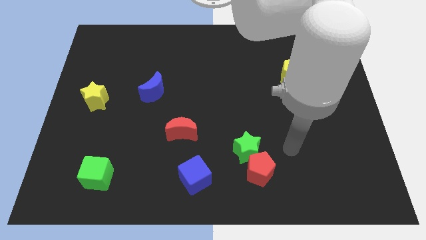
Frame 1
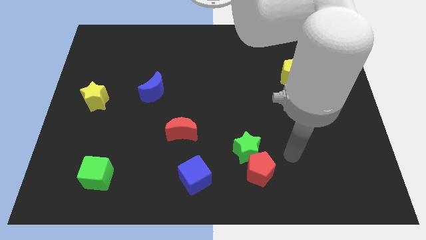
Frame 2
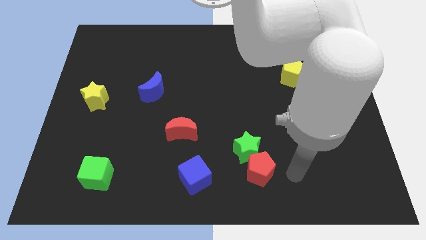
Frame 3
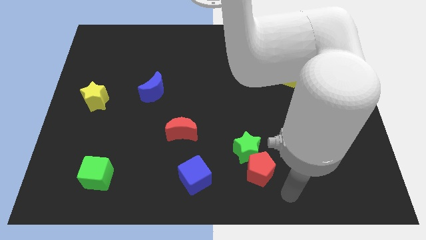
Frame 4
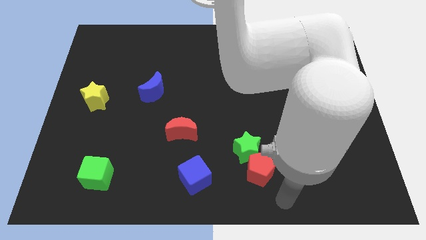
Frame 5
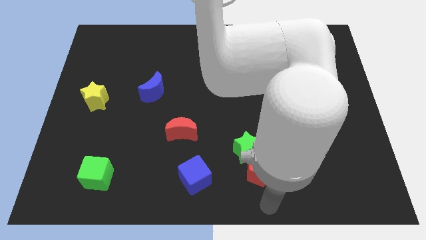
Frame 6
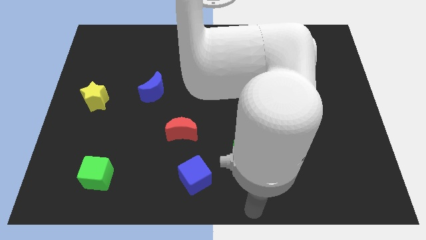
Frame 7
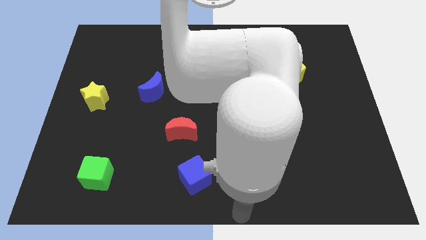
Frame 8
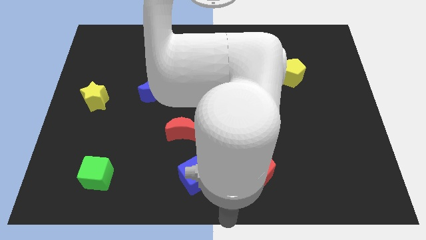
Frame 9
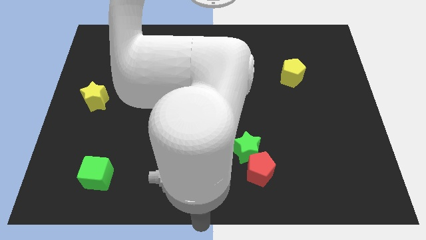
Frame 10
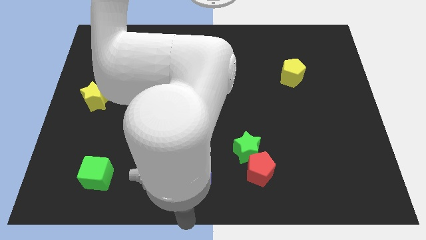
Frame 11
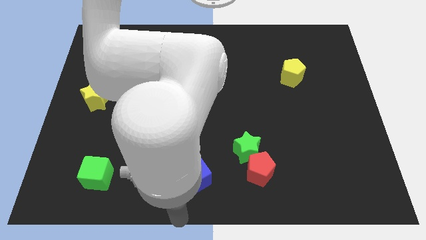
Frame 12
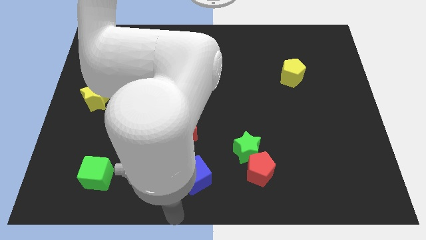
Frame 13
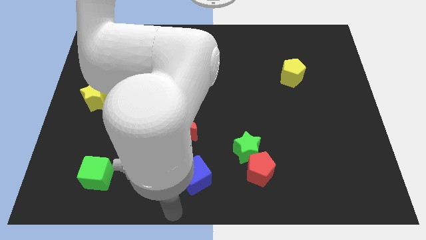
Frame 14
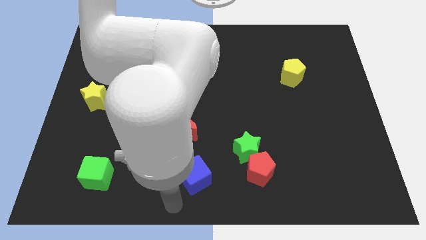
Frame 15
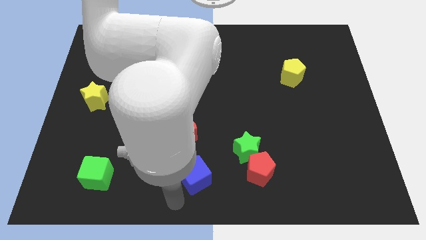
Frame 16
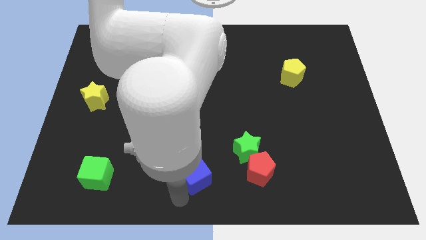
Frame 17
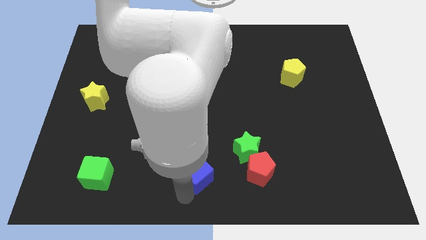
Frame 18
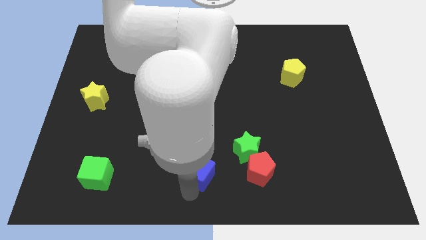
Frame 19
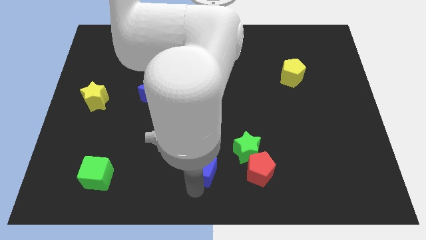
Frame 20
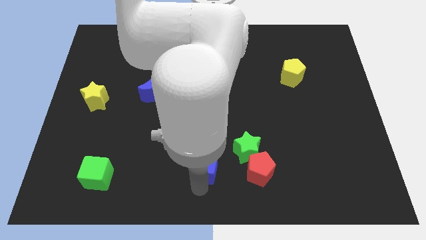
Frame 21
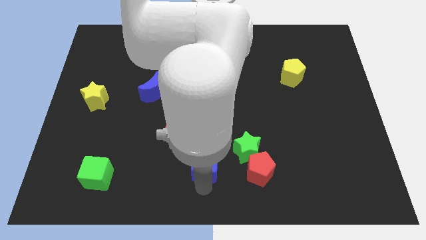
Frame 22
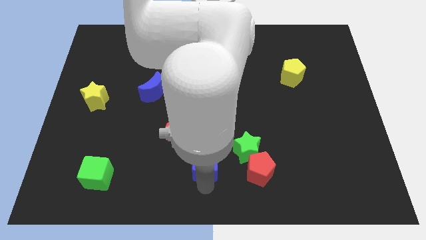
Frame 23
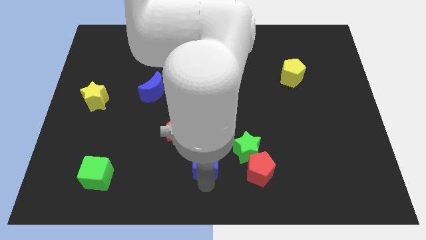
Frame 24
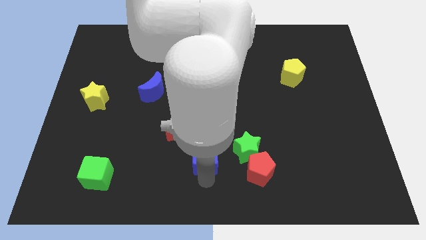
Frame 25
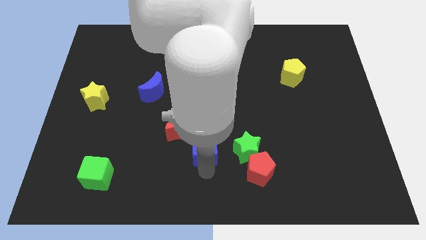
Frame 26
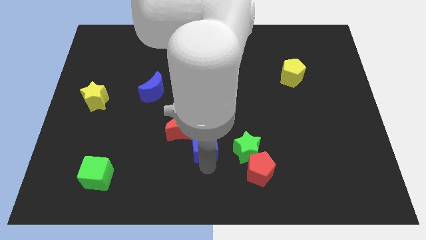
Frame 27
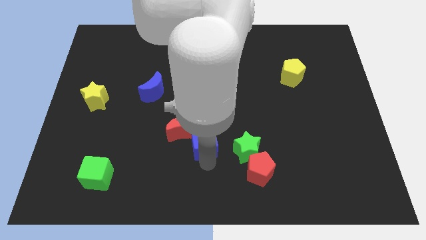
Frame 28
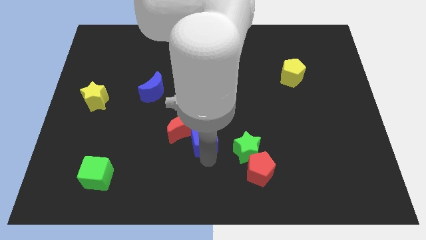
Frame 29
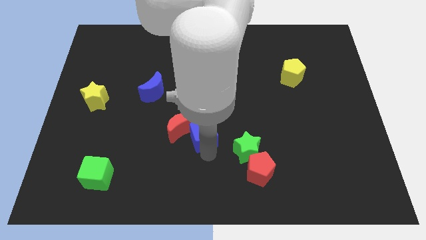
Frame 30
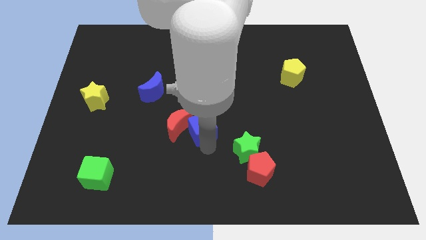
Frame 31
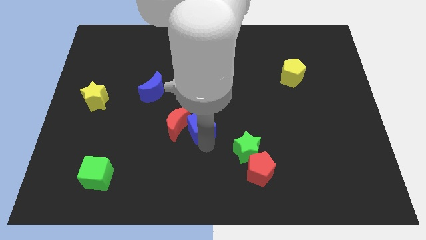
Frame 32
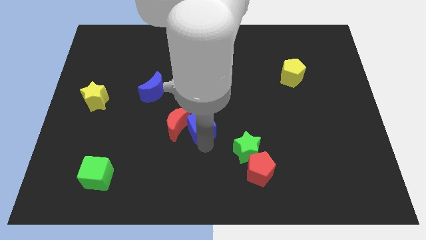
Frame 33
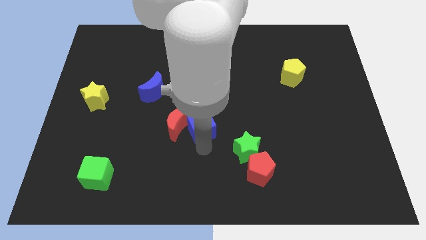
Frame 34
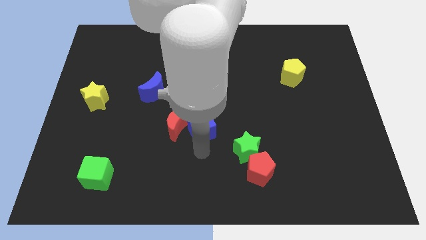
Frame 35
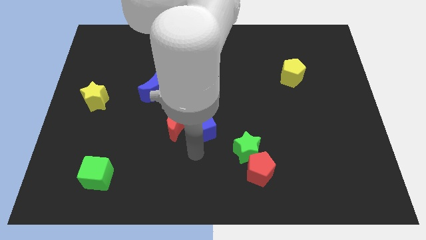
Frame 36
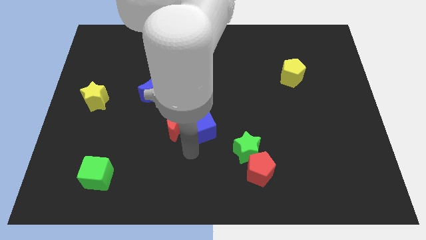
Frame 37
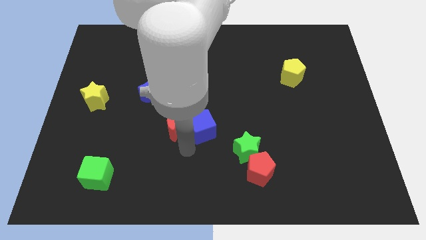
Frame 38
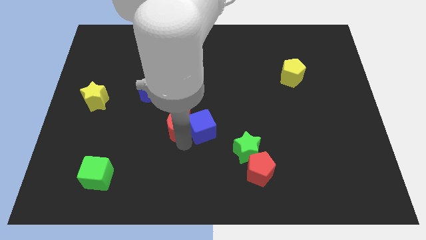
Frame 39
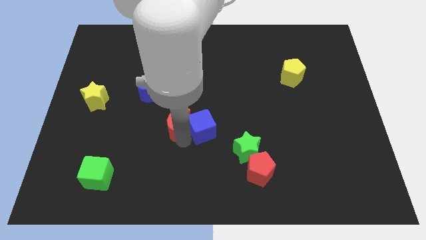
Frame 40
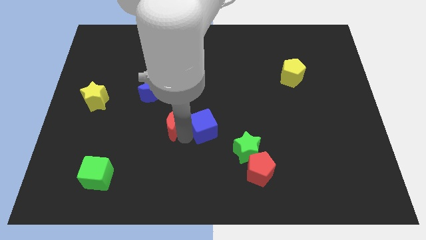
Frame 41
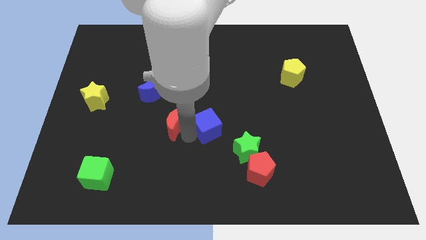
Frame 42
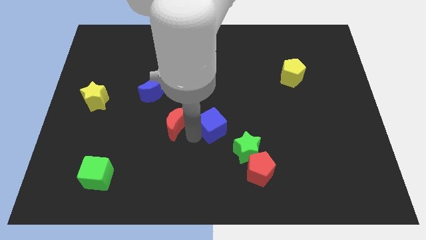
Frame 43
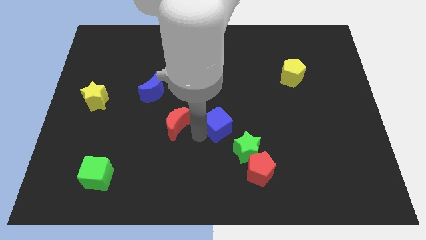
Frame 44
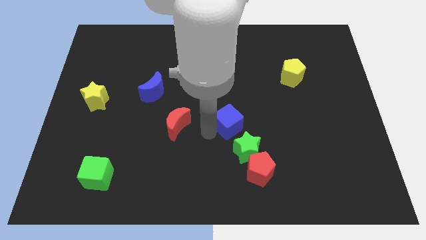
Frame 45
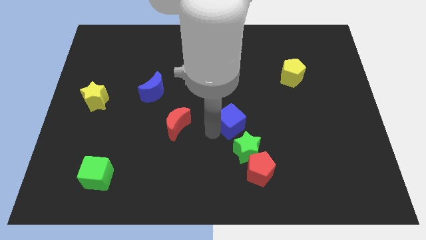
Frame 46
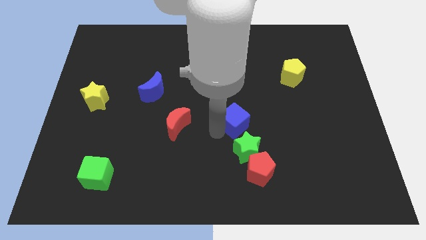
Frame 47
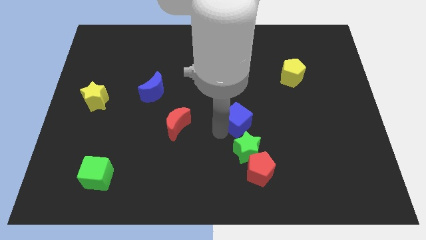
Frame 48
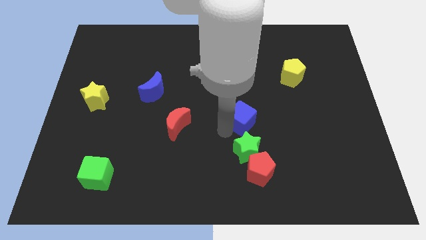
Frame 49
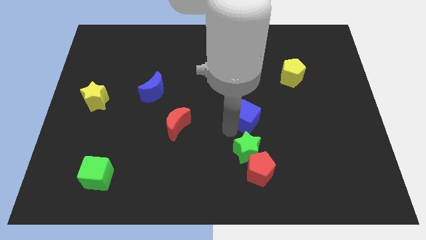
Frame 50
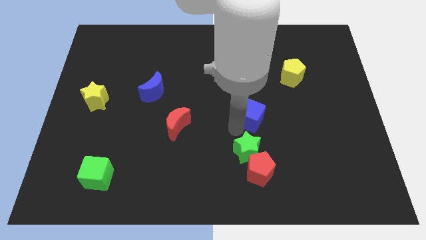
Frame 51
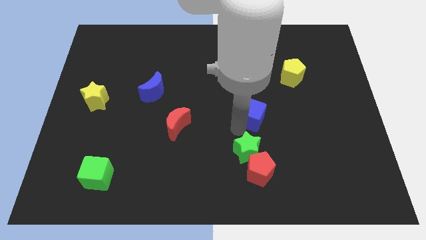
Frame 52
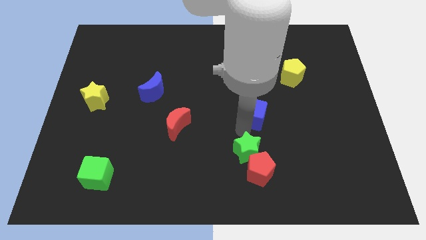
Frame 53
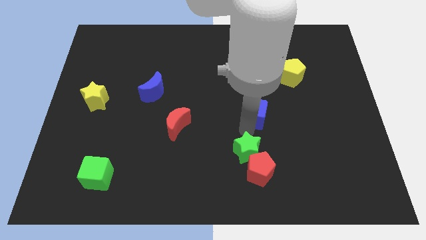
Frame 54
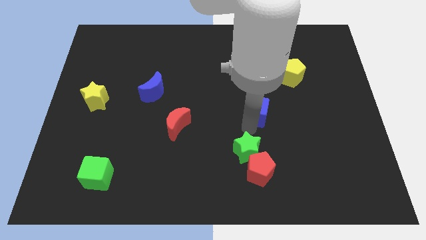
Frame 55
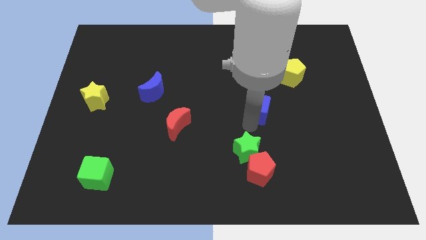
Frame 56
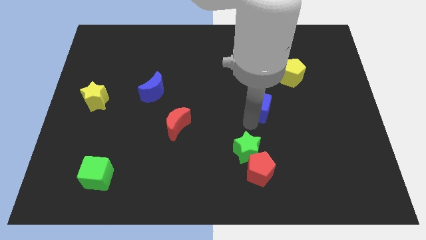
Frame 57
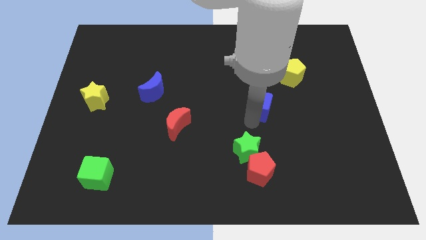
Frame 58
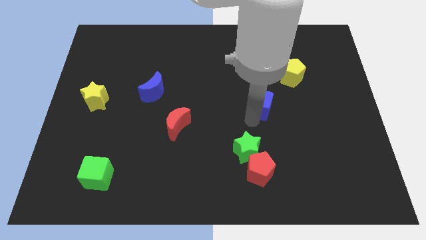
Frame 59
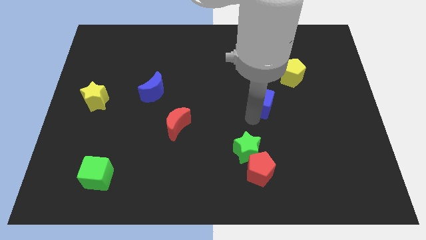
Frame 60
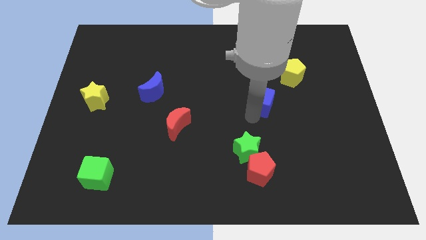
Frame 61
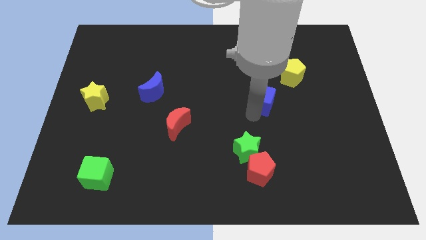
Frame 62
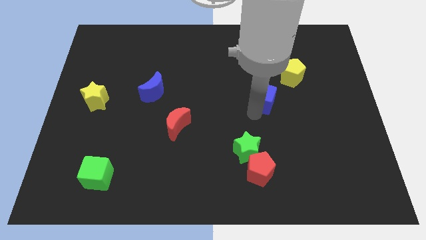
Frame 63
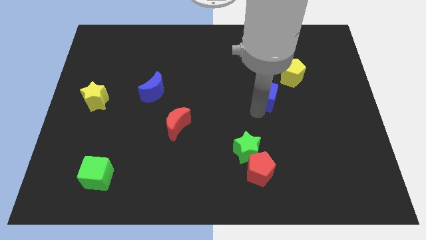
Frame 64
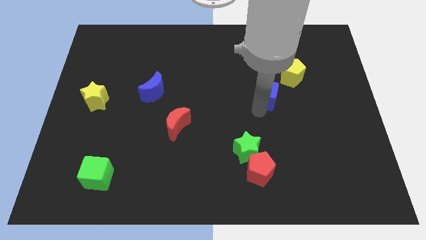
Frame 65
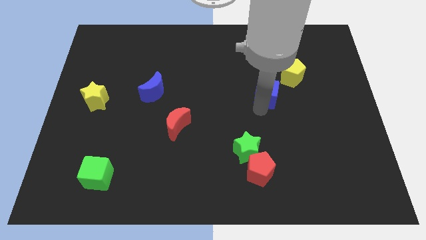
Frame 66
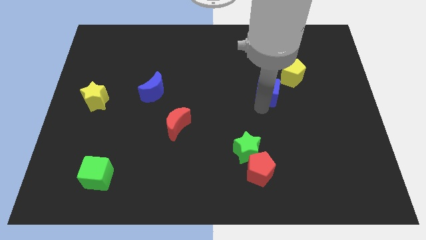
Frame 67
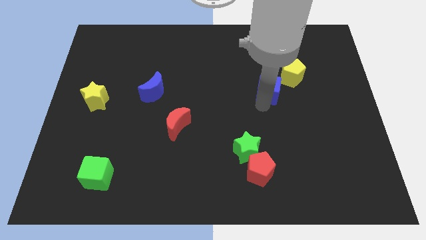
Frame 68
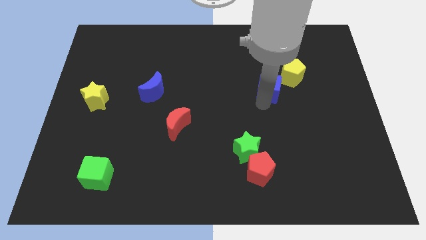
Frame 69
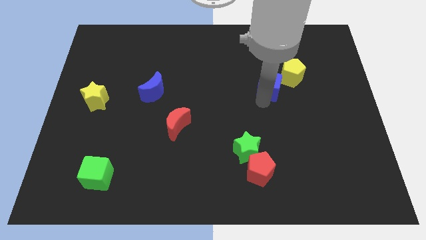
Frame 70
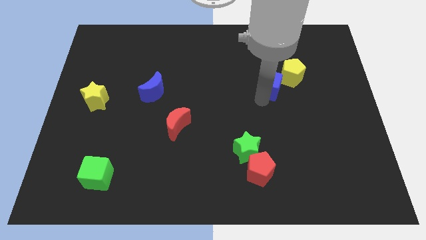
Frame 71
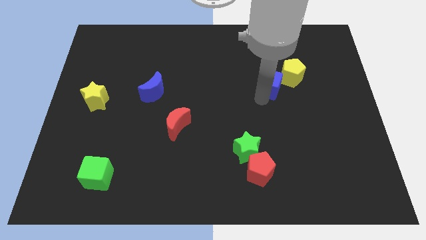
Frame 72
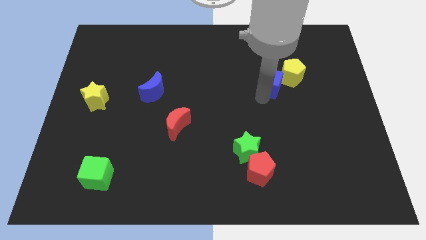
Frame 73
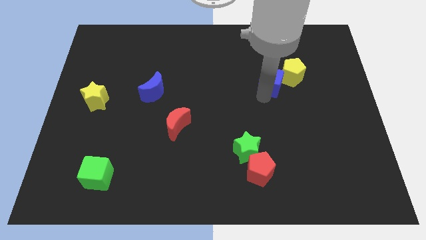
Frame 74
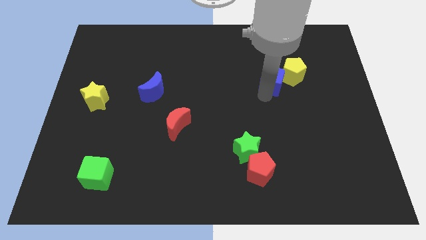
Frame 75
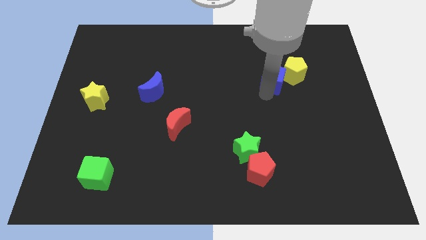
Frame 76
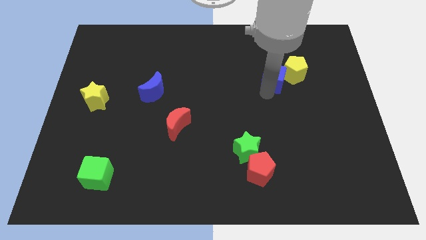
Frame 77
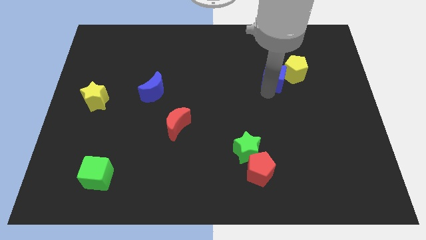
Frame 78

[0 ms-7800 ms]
slide the blue cube towards the yellow pentagon
